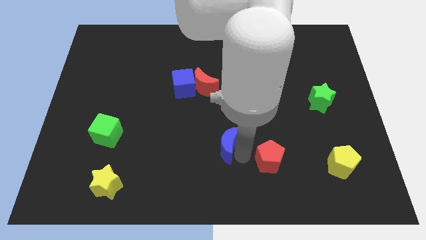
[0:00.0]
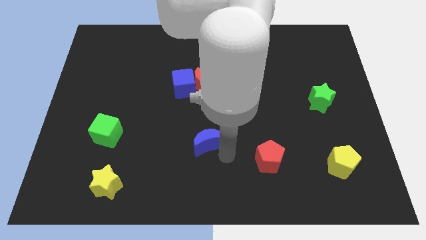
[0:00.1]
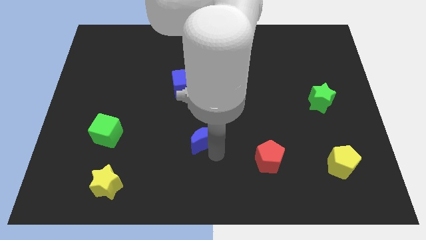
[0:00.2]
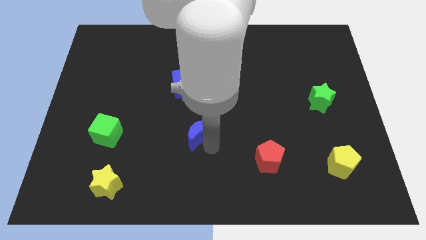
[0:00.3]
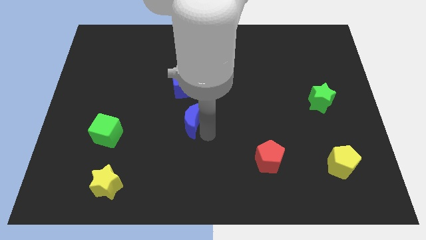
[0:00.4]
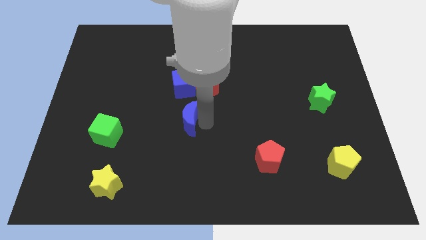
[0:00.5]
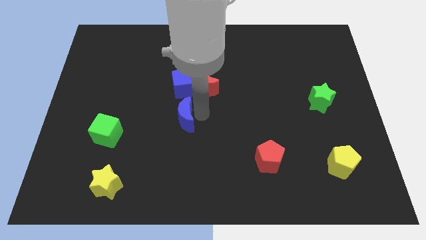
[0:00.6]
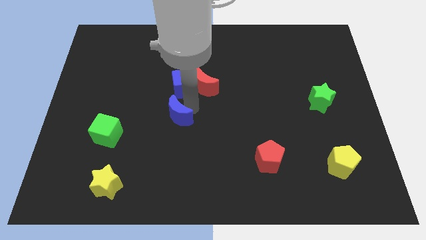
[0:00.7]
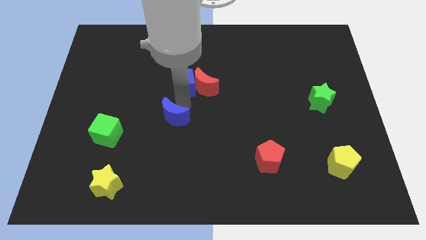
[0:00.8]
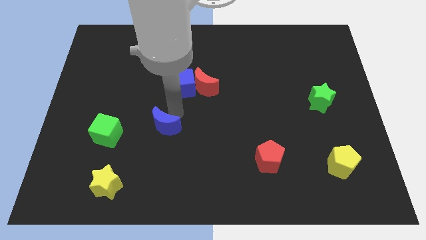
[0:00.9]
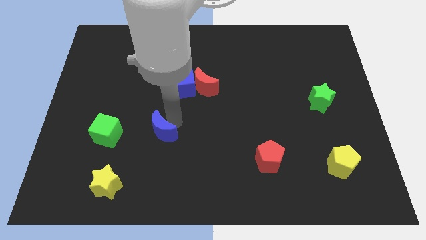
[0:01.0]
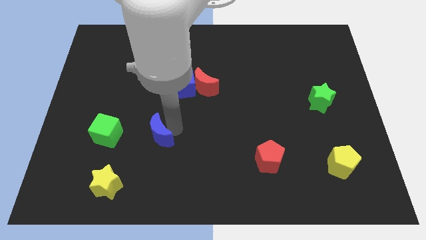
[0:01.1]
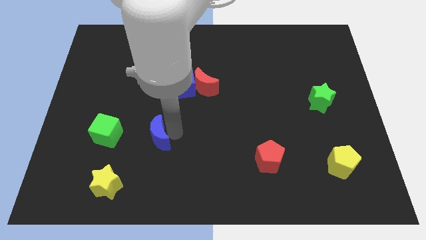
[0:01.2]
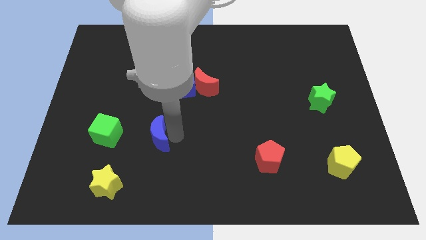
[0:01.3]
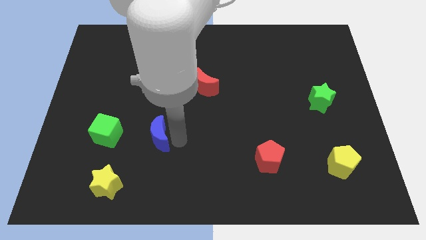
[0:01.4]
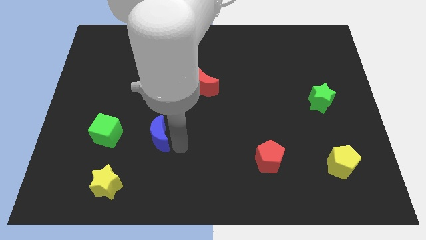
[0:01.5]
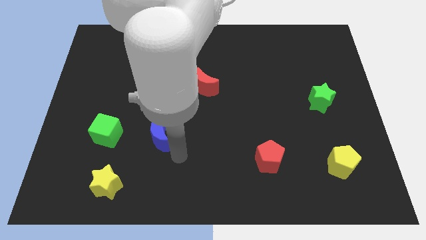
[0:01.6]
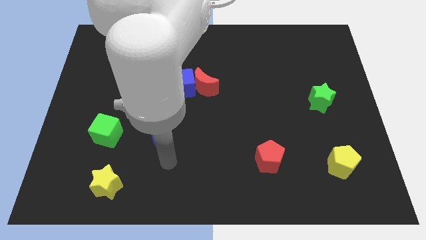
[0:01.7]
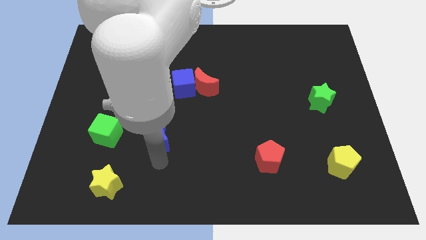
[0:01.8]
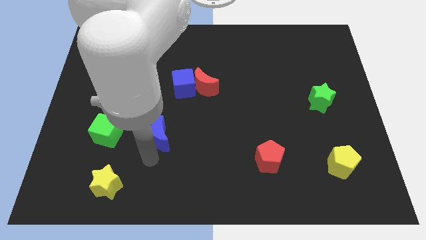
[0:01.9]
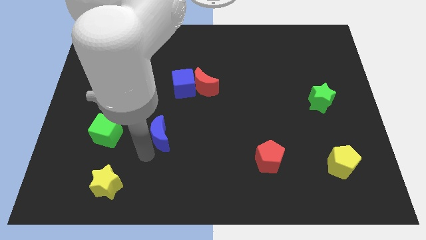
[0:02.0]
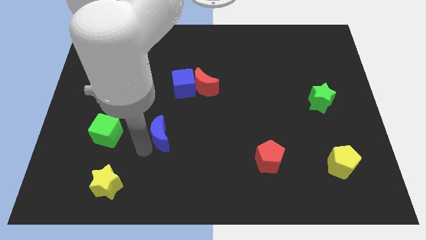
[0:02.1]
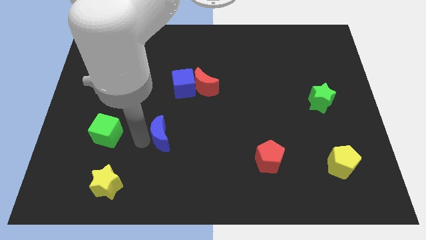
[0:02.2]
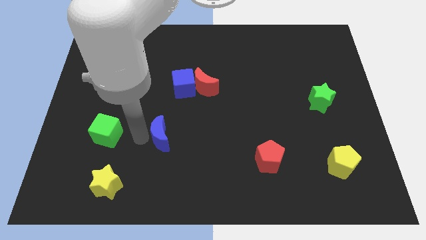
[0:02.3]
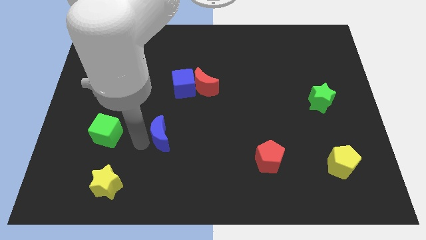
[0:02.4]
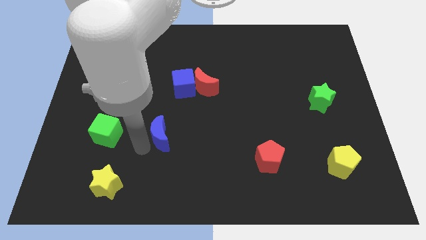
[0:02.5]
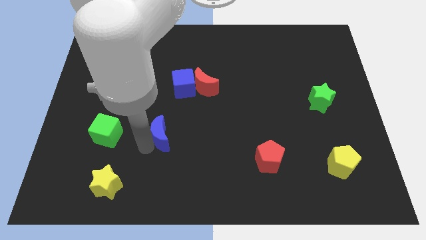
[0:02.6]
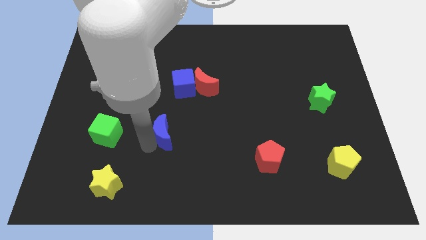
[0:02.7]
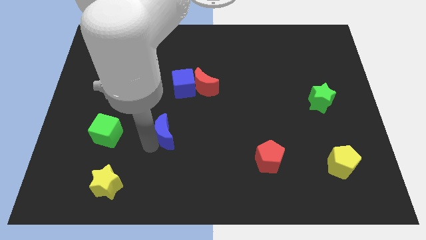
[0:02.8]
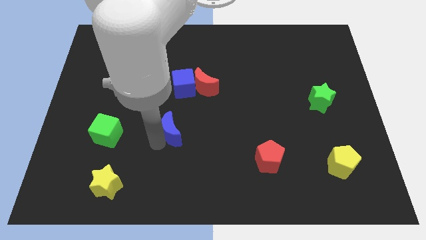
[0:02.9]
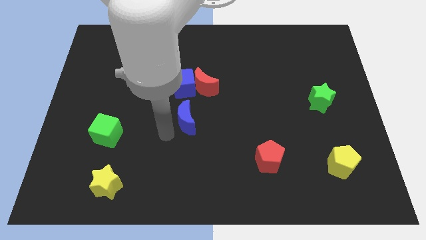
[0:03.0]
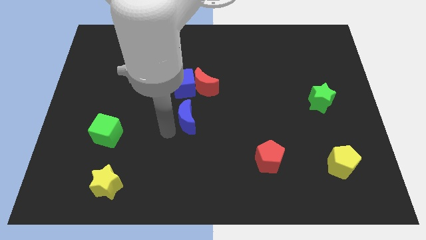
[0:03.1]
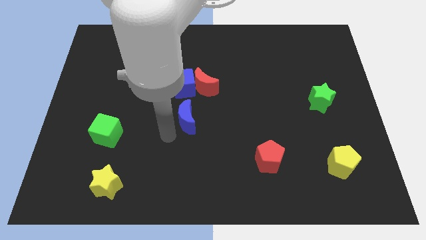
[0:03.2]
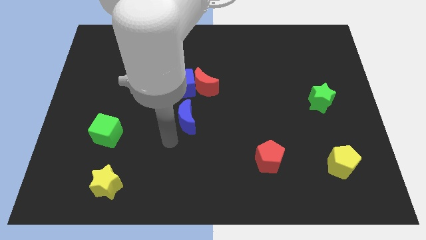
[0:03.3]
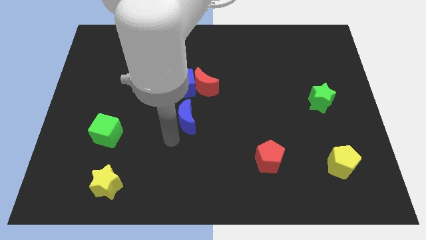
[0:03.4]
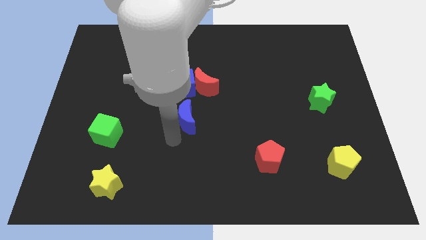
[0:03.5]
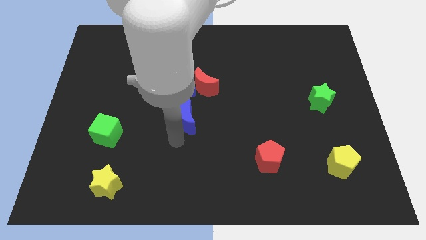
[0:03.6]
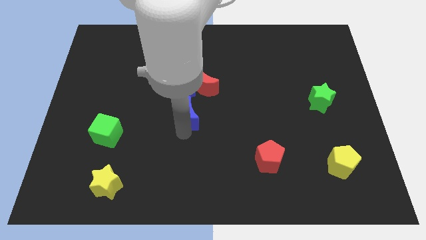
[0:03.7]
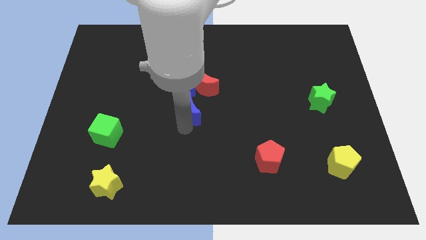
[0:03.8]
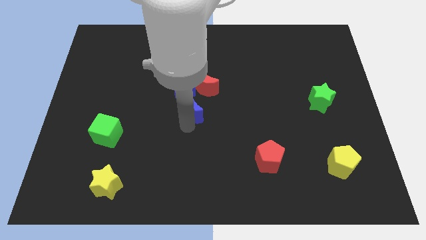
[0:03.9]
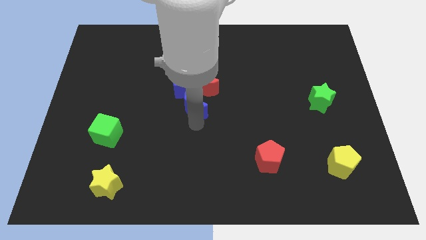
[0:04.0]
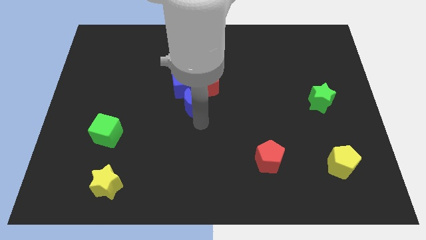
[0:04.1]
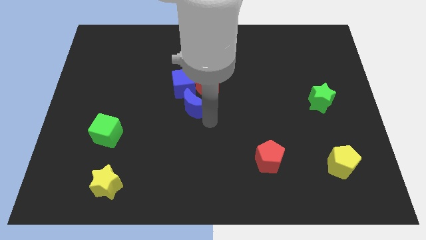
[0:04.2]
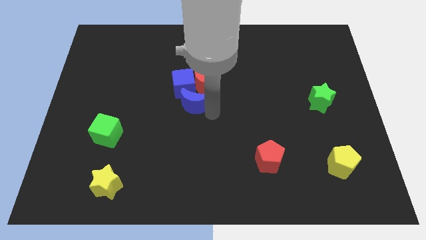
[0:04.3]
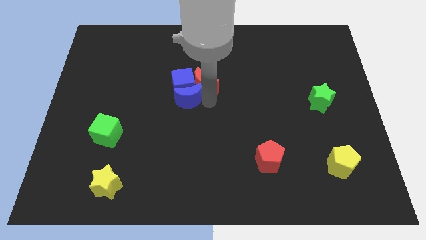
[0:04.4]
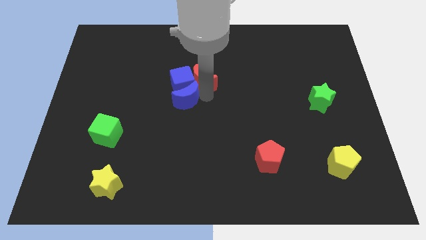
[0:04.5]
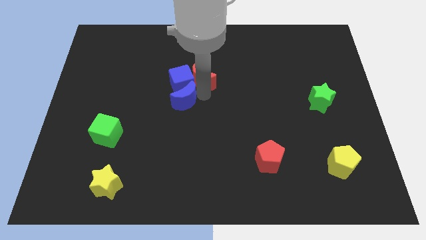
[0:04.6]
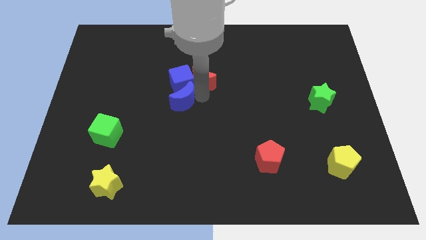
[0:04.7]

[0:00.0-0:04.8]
push the blue moon into the blue cube

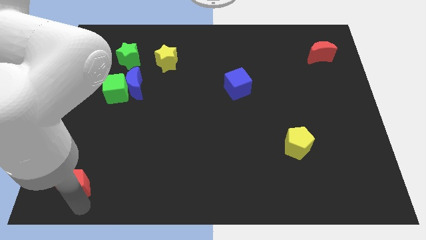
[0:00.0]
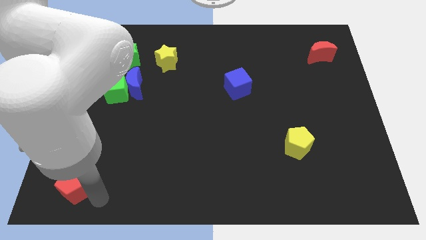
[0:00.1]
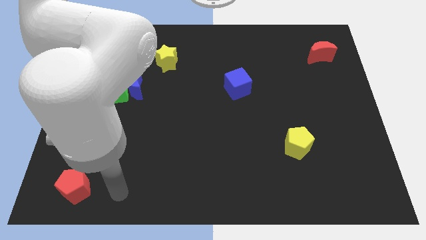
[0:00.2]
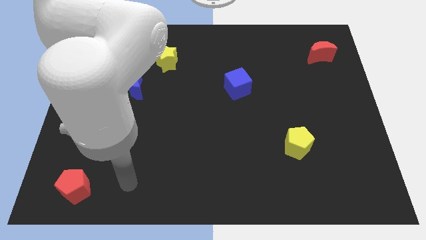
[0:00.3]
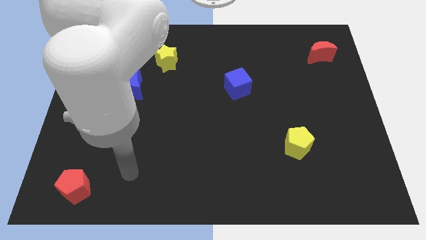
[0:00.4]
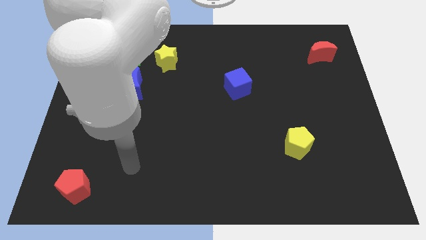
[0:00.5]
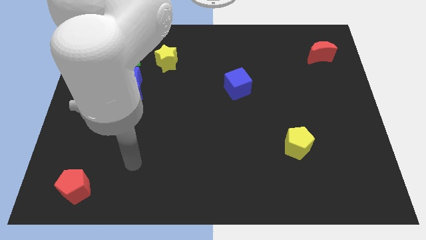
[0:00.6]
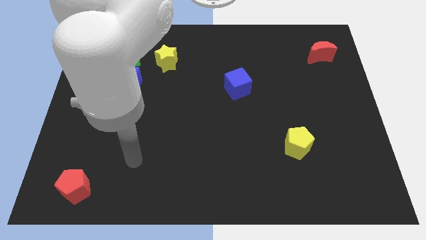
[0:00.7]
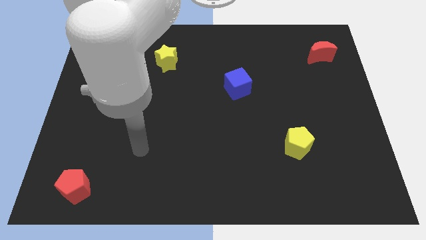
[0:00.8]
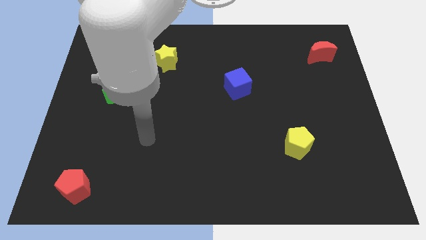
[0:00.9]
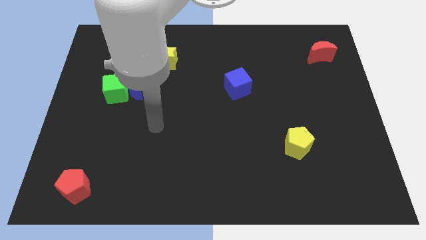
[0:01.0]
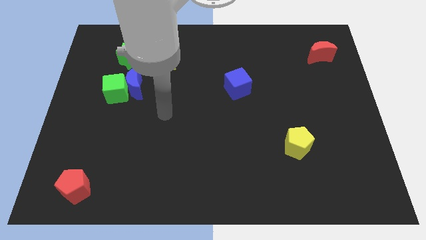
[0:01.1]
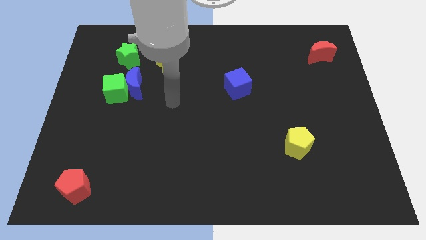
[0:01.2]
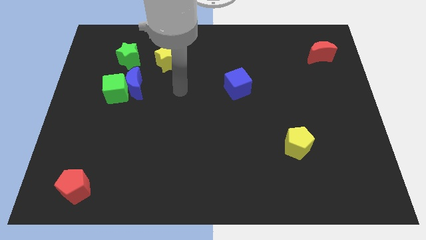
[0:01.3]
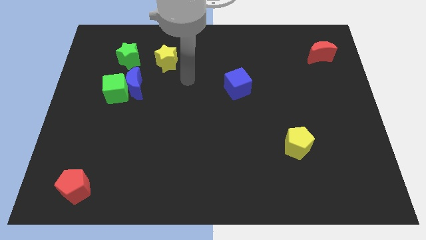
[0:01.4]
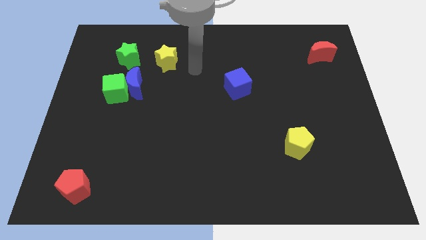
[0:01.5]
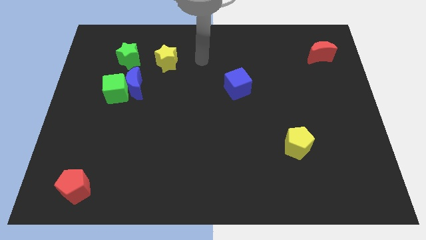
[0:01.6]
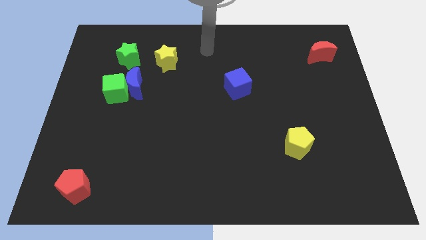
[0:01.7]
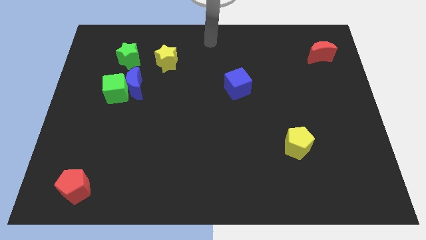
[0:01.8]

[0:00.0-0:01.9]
drag your arm towards the top center

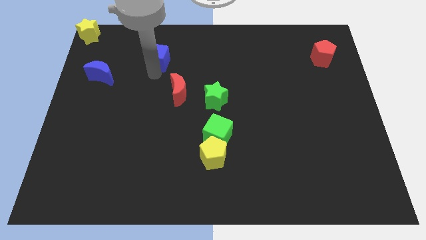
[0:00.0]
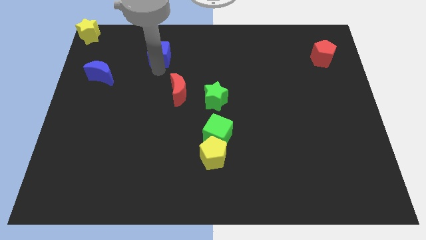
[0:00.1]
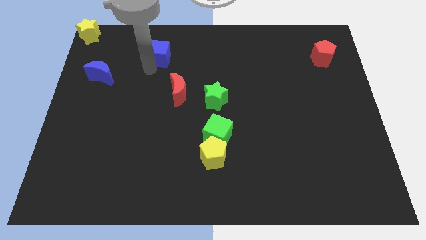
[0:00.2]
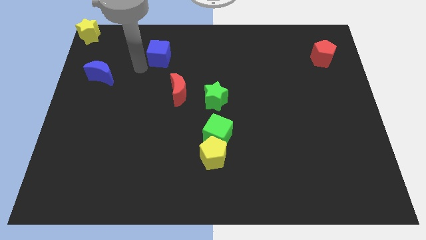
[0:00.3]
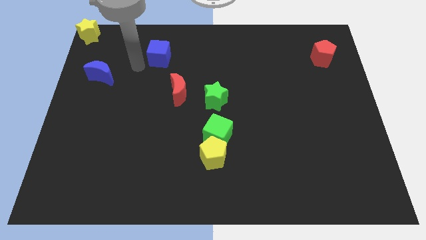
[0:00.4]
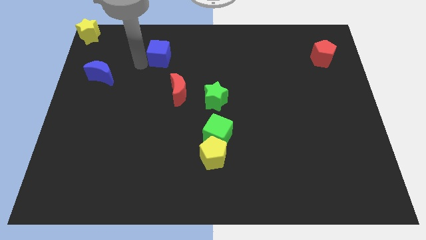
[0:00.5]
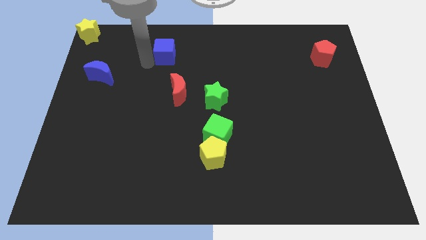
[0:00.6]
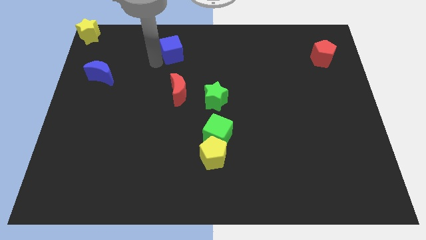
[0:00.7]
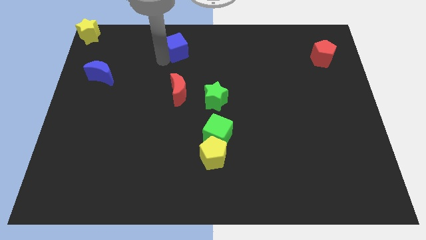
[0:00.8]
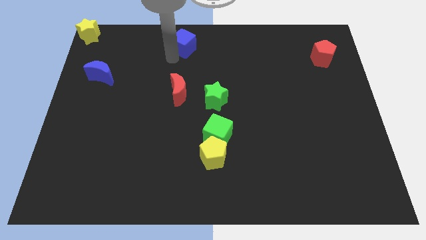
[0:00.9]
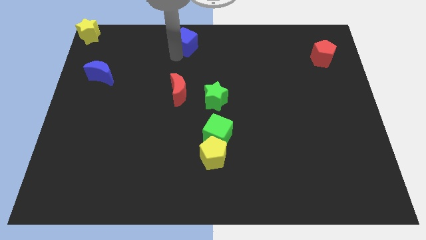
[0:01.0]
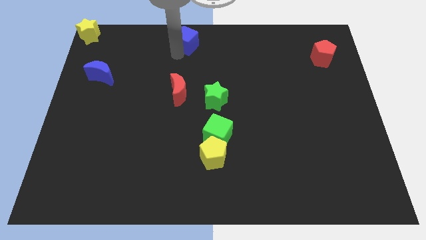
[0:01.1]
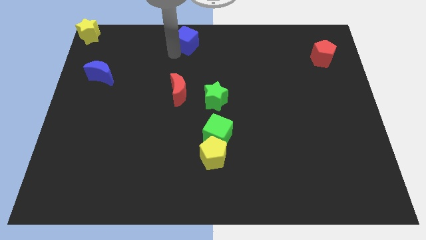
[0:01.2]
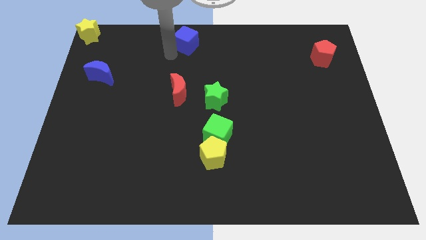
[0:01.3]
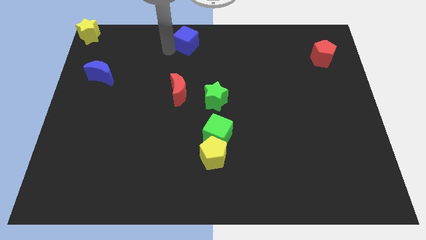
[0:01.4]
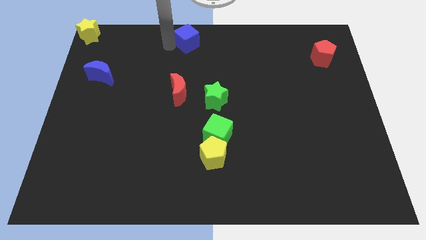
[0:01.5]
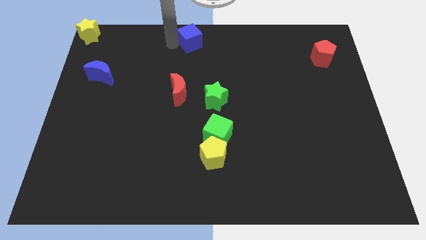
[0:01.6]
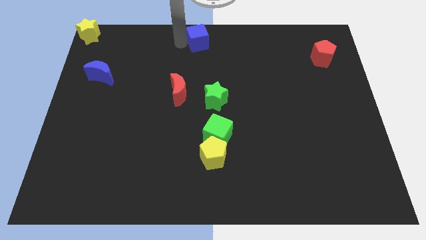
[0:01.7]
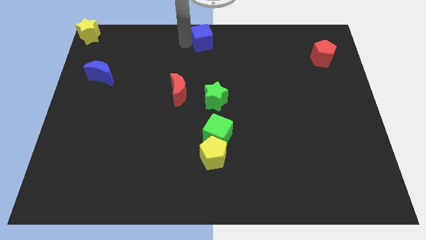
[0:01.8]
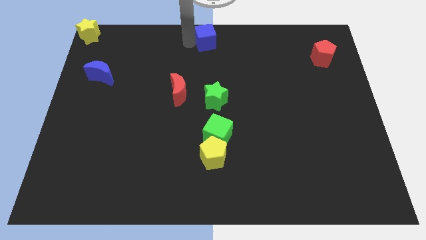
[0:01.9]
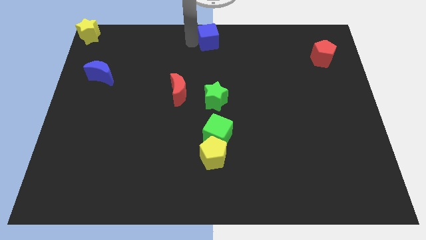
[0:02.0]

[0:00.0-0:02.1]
put the blue cube at the top center of the board

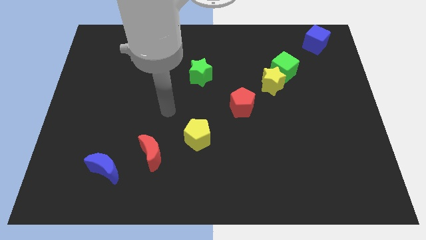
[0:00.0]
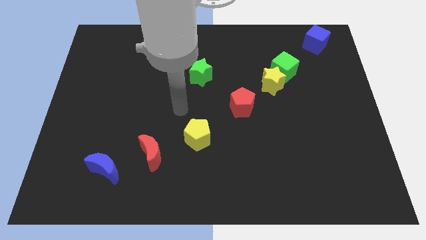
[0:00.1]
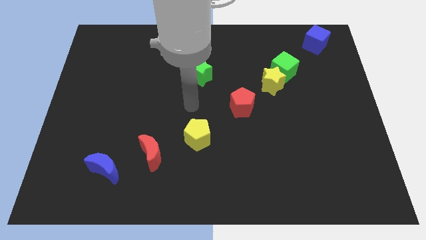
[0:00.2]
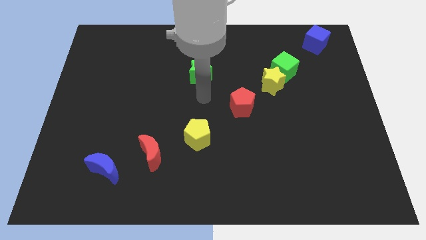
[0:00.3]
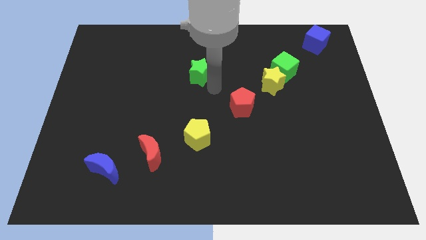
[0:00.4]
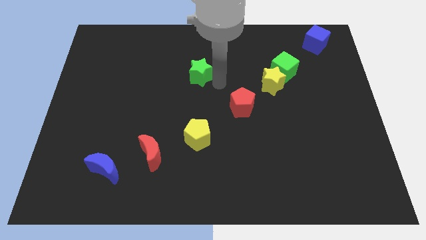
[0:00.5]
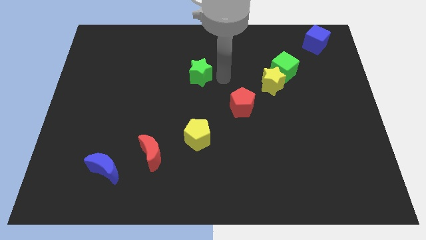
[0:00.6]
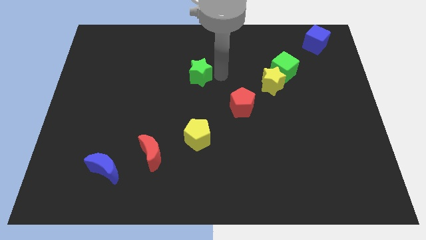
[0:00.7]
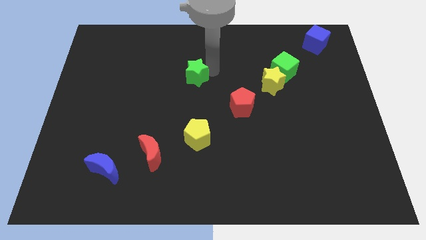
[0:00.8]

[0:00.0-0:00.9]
move the arm near the green star
